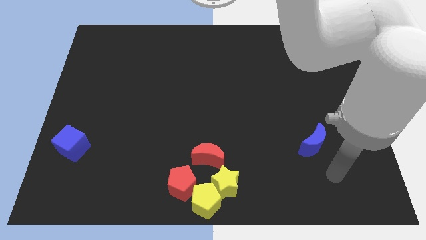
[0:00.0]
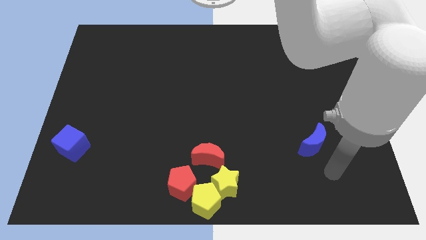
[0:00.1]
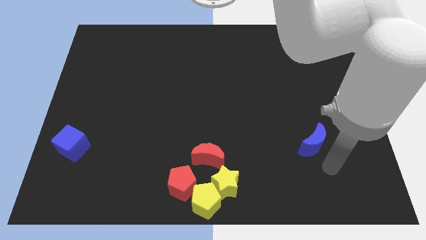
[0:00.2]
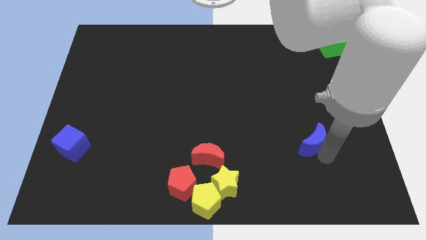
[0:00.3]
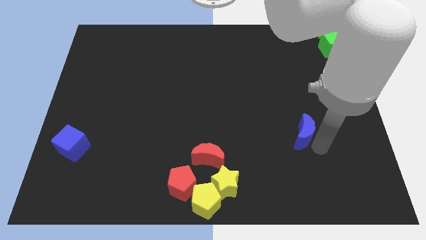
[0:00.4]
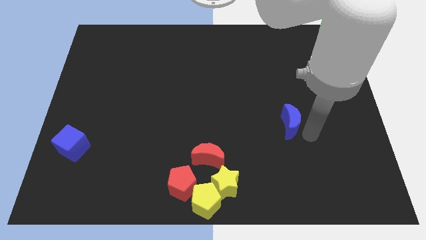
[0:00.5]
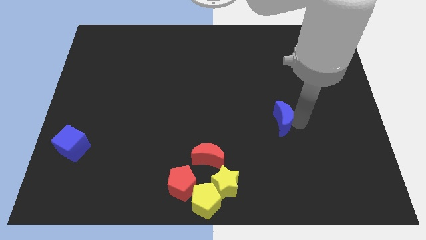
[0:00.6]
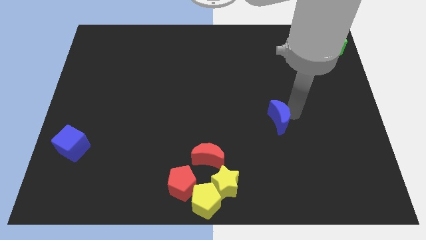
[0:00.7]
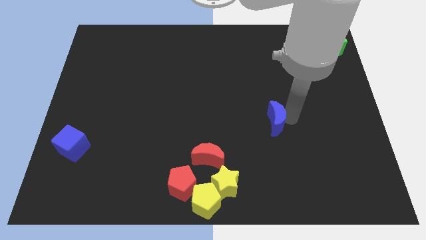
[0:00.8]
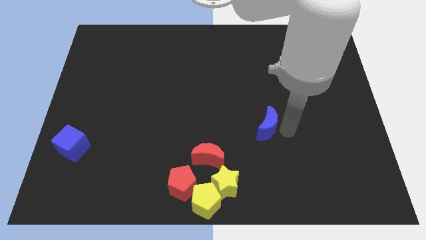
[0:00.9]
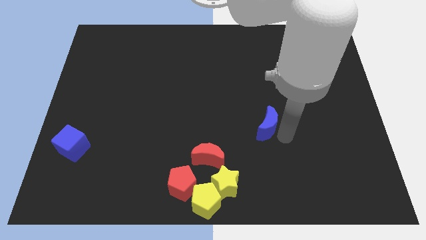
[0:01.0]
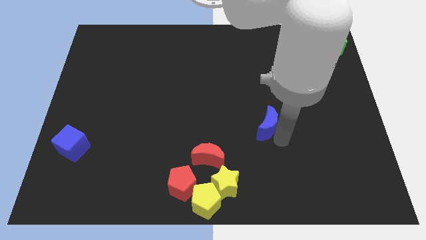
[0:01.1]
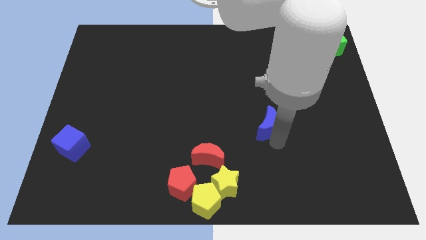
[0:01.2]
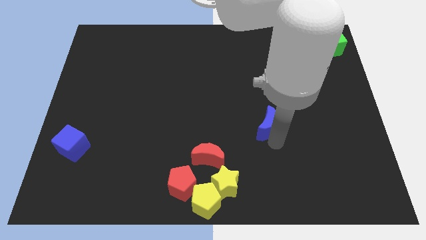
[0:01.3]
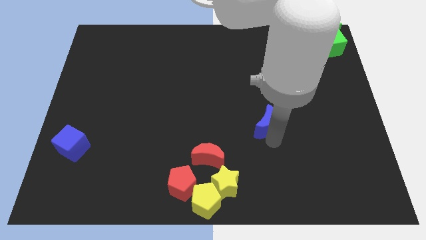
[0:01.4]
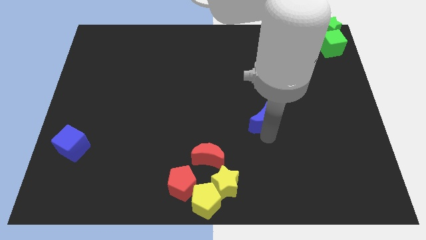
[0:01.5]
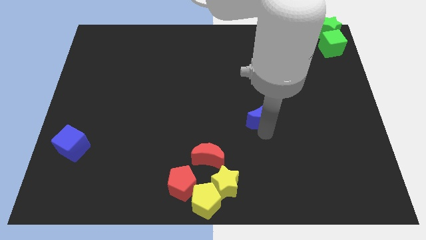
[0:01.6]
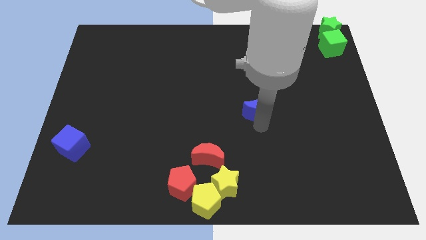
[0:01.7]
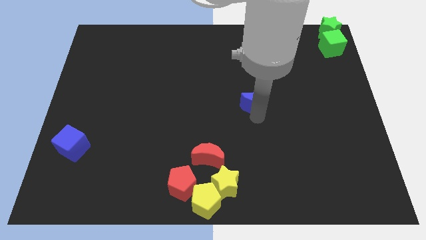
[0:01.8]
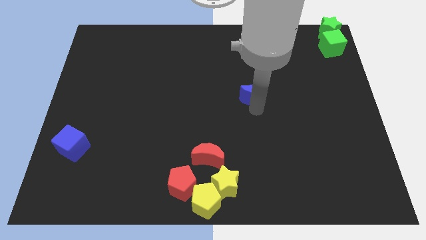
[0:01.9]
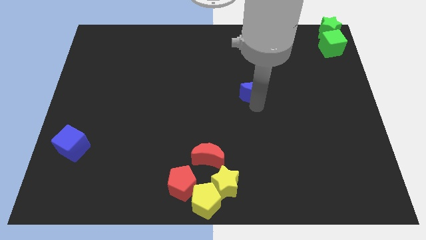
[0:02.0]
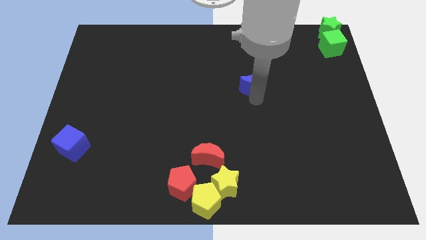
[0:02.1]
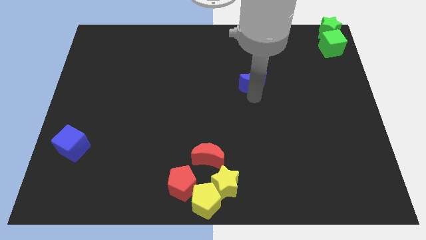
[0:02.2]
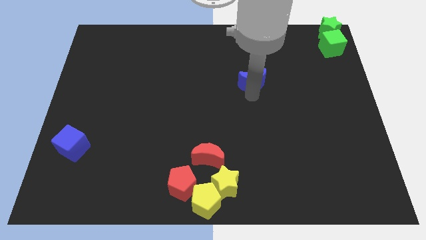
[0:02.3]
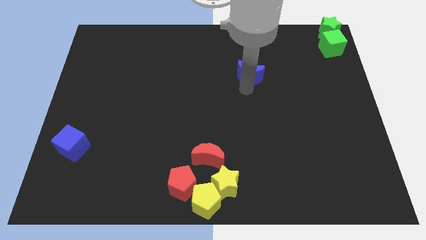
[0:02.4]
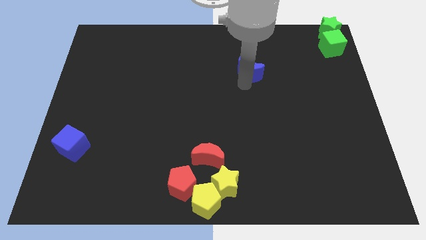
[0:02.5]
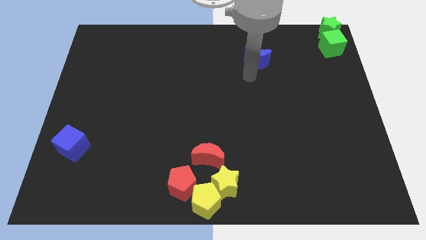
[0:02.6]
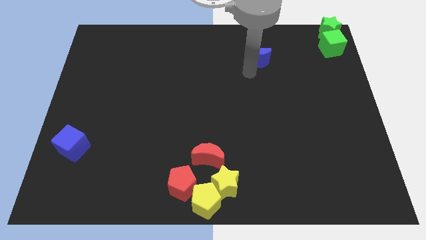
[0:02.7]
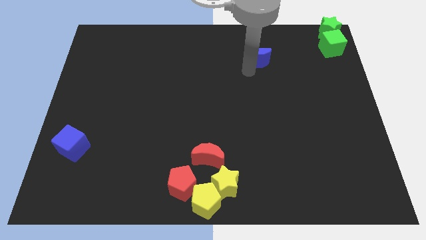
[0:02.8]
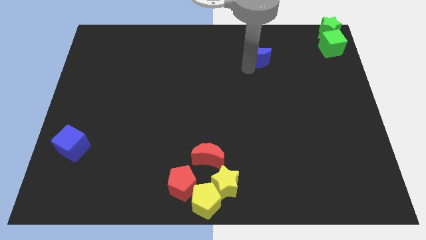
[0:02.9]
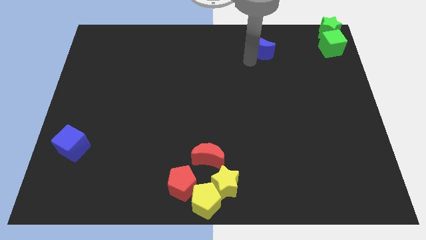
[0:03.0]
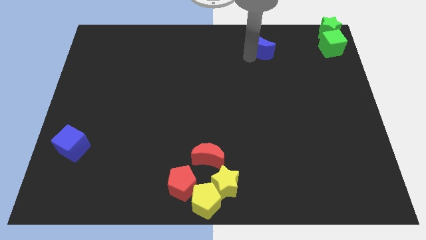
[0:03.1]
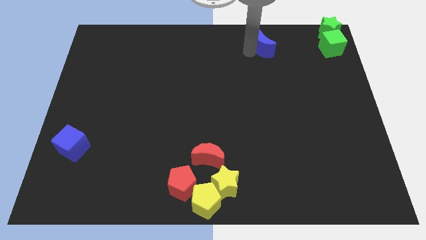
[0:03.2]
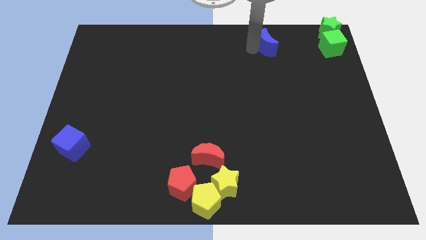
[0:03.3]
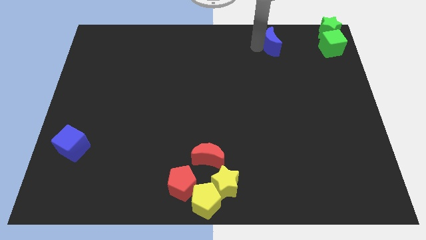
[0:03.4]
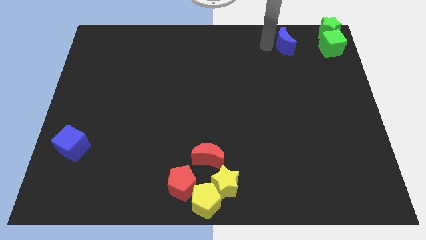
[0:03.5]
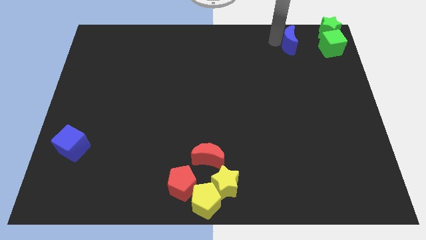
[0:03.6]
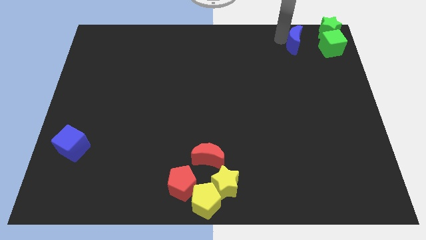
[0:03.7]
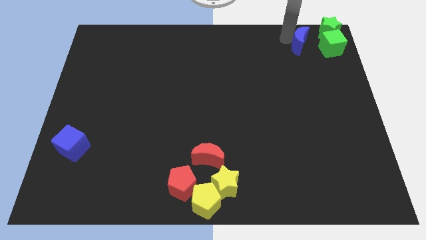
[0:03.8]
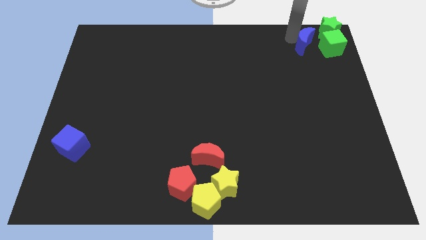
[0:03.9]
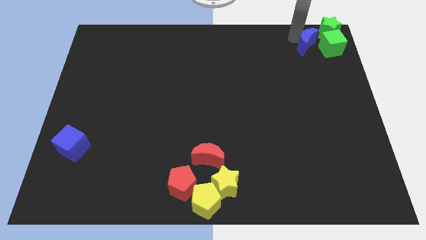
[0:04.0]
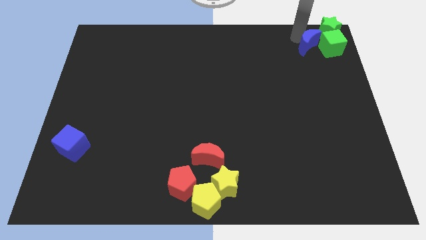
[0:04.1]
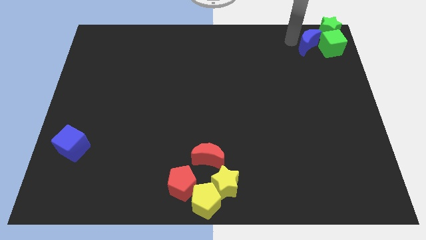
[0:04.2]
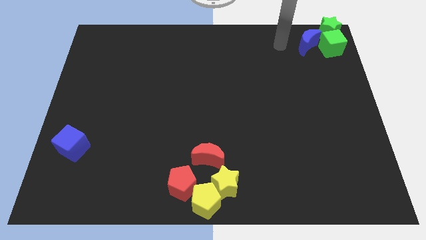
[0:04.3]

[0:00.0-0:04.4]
move the blue moon close to the left side of the group of green blocks

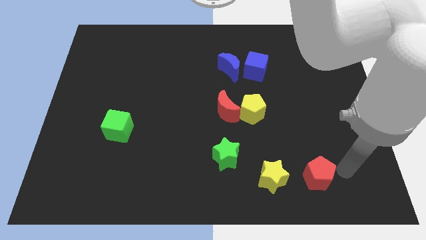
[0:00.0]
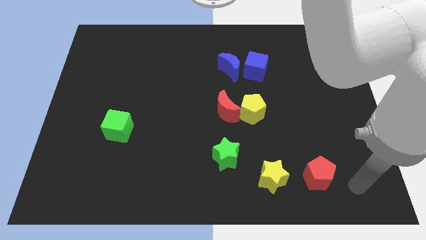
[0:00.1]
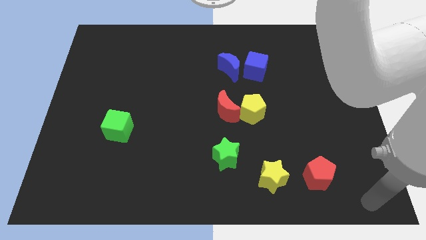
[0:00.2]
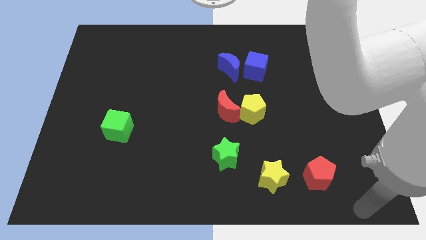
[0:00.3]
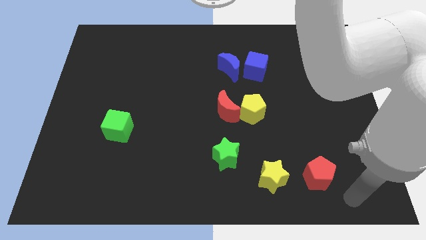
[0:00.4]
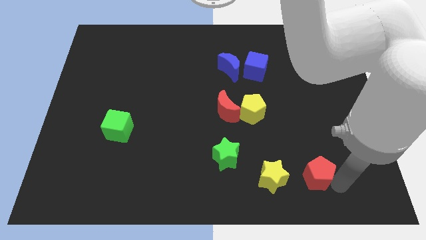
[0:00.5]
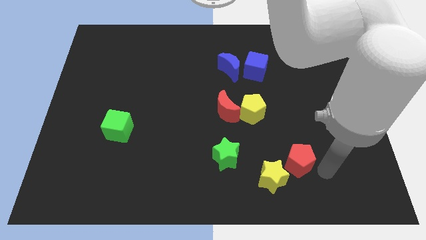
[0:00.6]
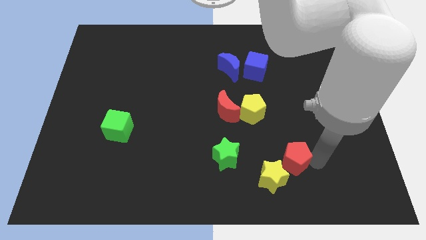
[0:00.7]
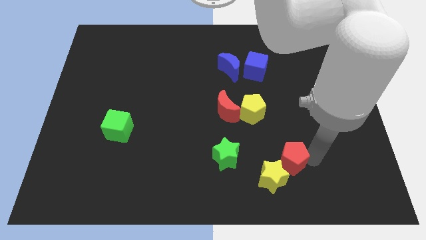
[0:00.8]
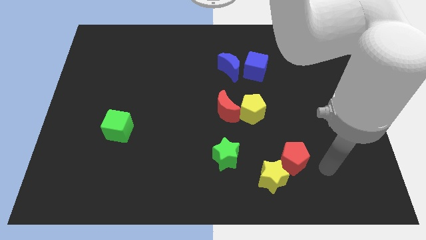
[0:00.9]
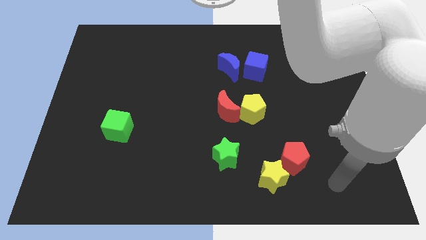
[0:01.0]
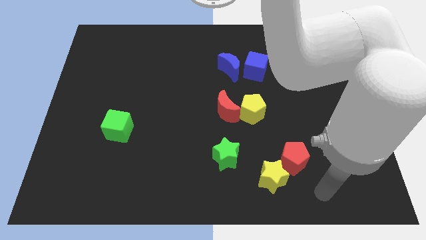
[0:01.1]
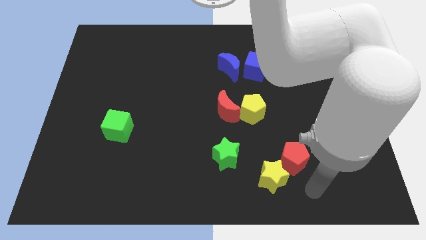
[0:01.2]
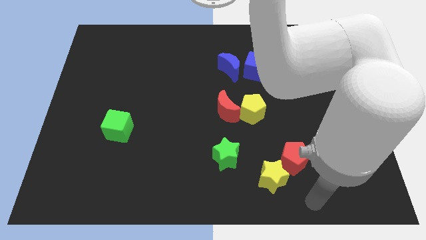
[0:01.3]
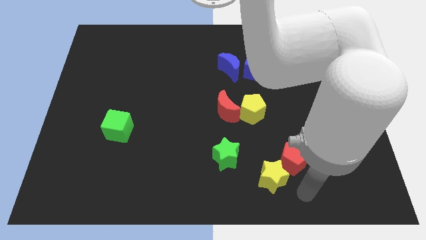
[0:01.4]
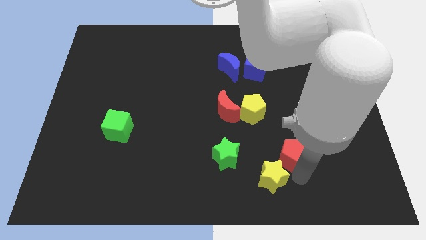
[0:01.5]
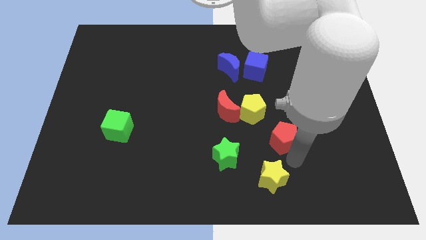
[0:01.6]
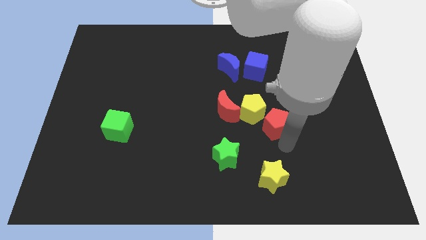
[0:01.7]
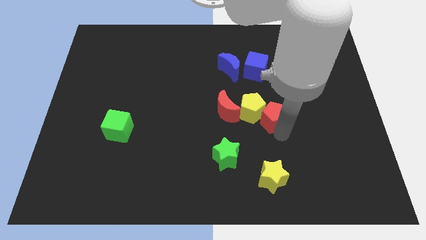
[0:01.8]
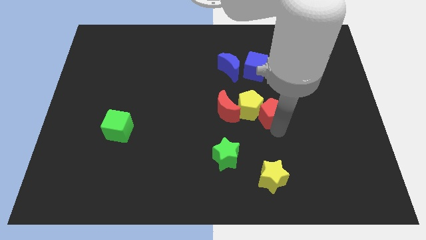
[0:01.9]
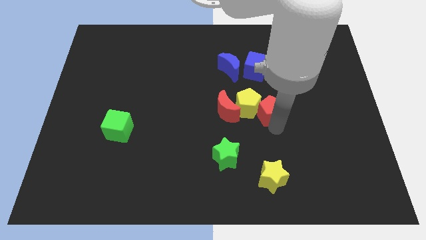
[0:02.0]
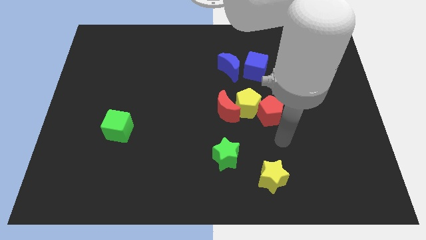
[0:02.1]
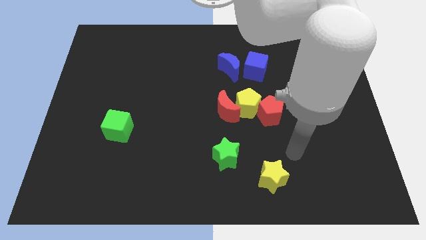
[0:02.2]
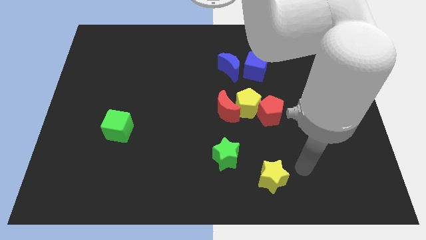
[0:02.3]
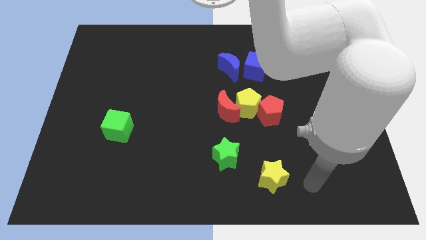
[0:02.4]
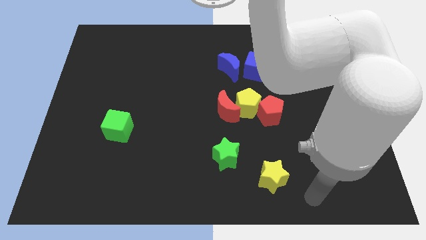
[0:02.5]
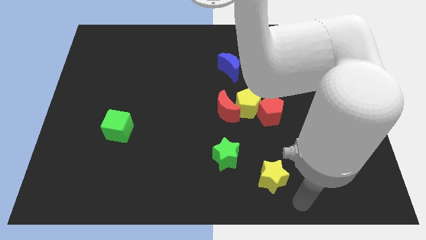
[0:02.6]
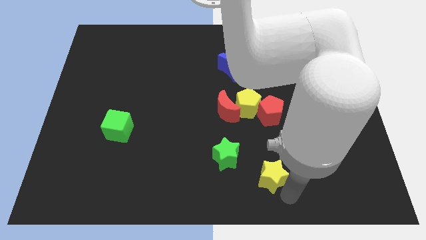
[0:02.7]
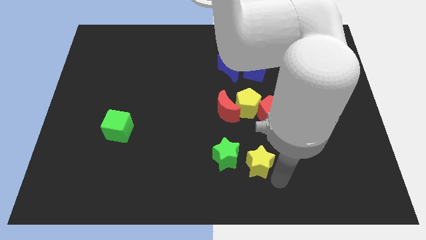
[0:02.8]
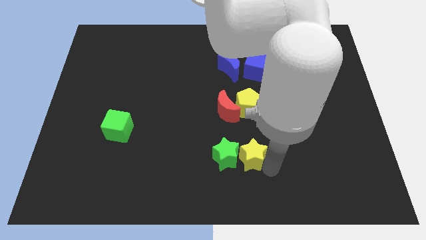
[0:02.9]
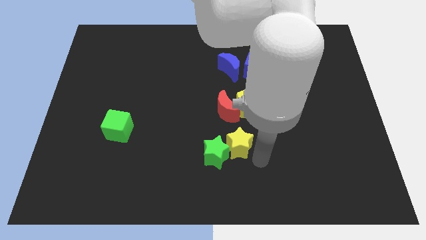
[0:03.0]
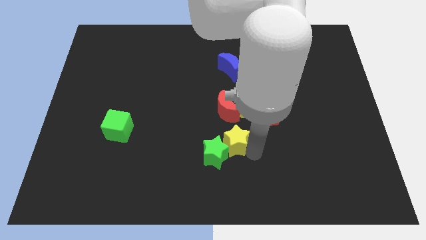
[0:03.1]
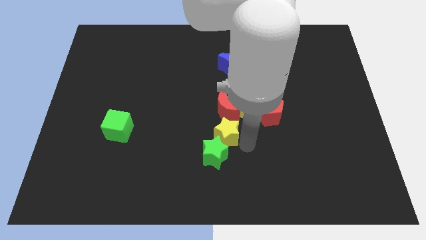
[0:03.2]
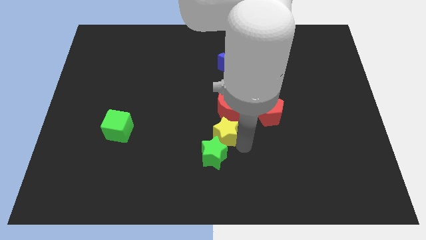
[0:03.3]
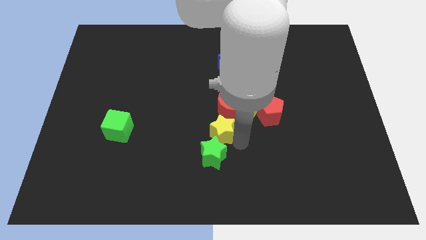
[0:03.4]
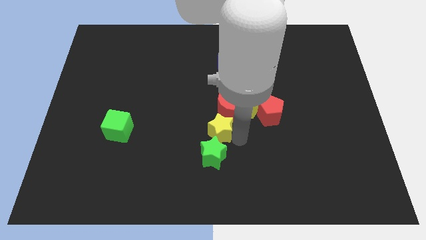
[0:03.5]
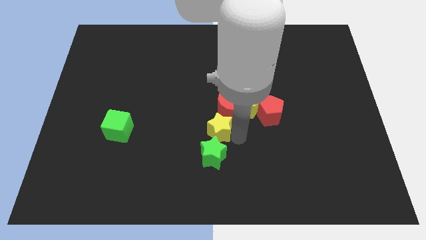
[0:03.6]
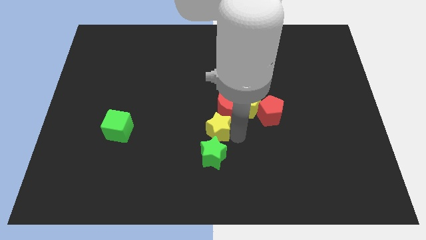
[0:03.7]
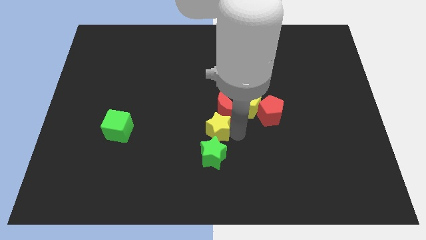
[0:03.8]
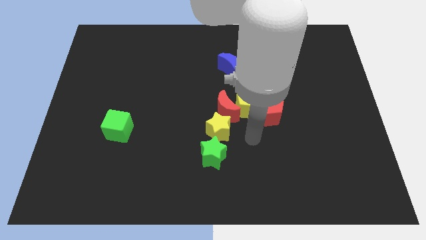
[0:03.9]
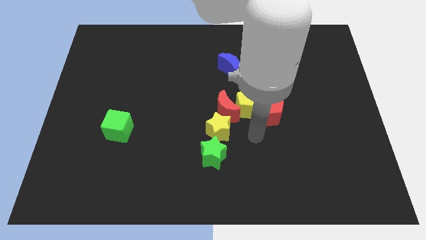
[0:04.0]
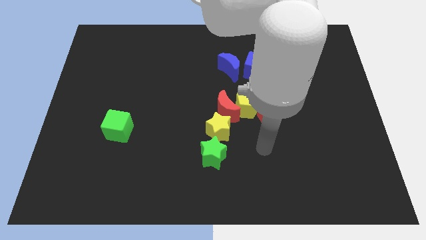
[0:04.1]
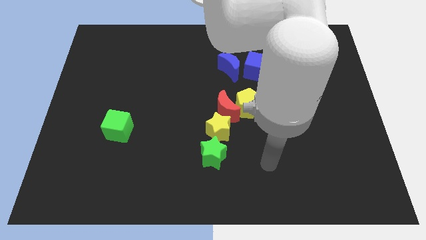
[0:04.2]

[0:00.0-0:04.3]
push red pentagon yellow star into yellow pentagon and red moon

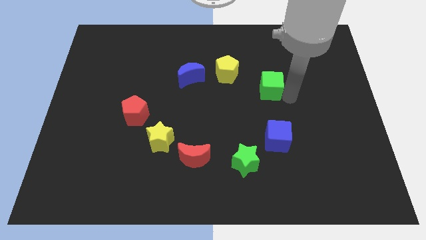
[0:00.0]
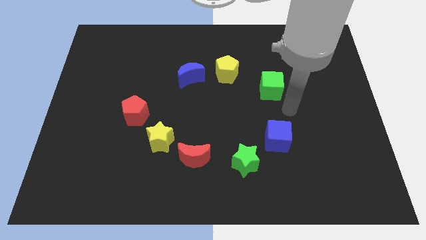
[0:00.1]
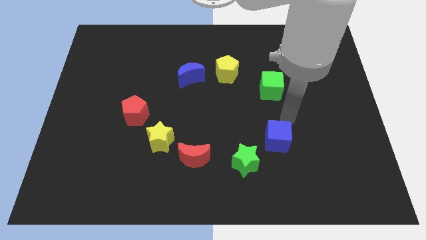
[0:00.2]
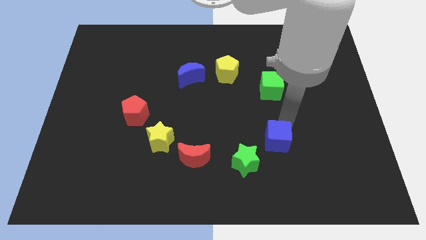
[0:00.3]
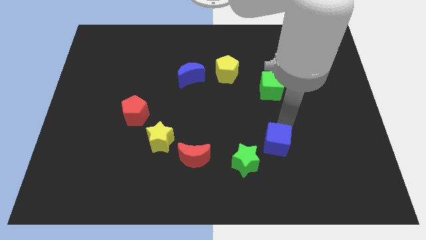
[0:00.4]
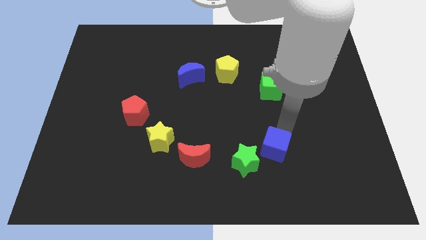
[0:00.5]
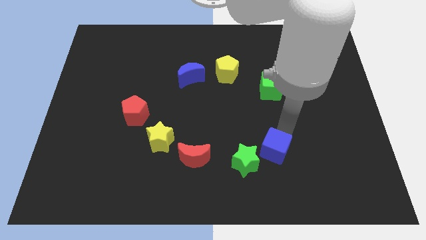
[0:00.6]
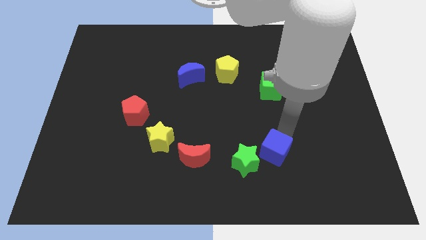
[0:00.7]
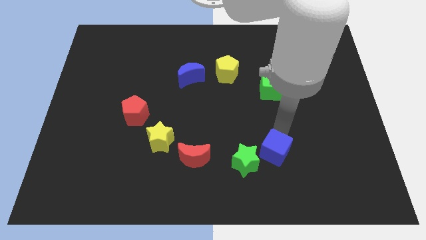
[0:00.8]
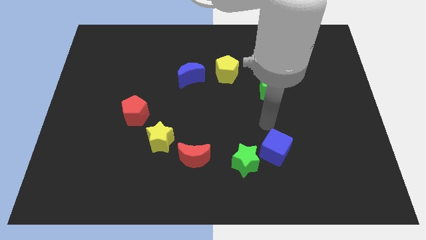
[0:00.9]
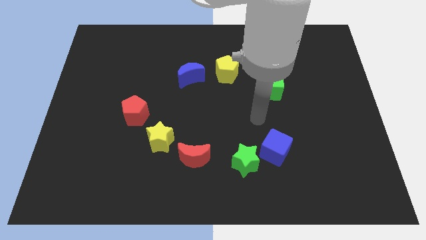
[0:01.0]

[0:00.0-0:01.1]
move the blue cube close to the green star
